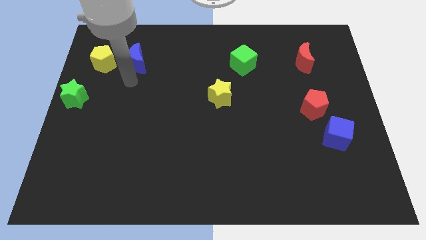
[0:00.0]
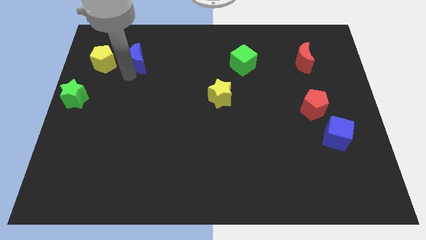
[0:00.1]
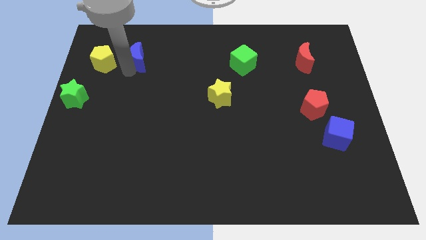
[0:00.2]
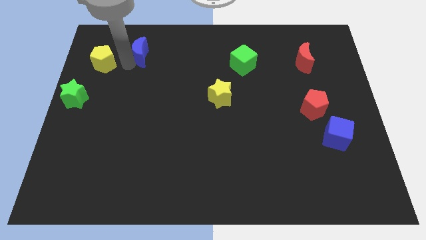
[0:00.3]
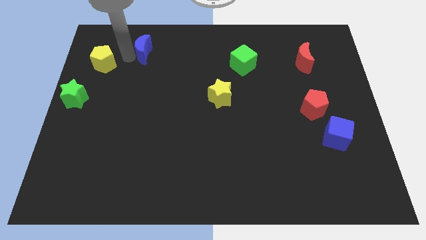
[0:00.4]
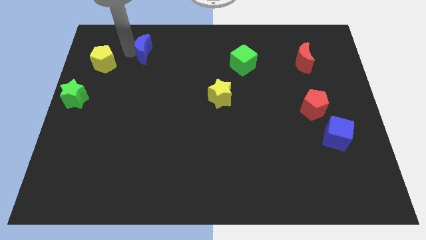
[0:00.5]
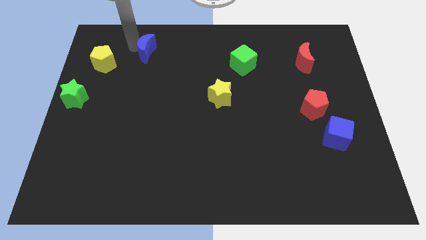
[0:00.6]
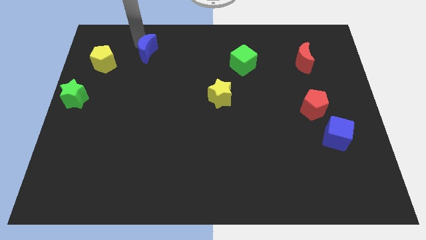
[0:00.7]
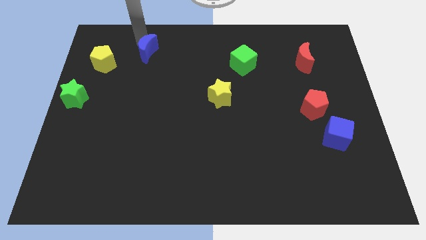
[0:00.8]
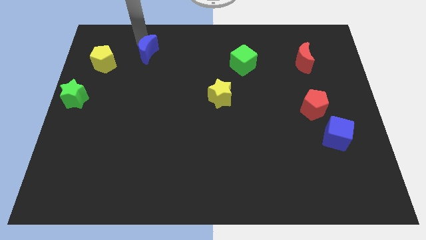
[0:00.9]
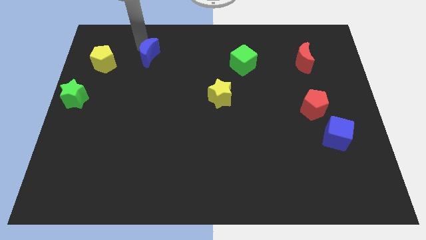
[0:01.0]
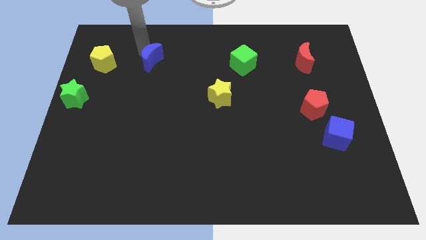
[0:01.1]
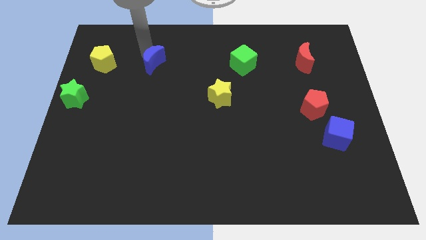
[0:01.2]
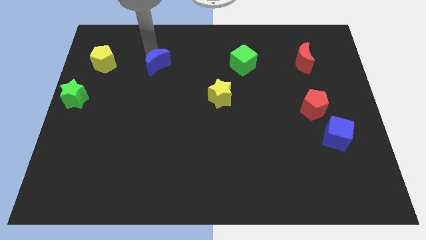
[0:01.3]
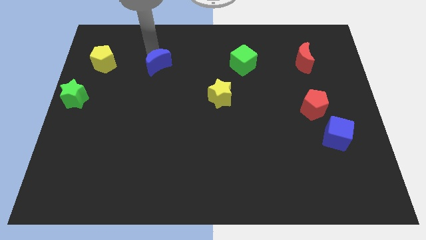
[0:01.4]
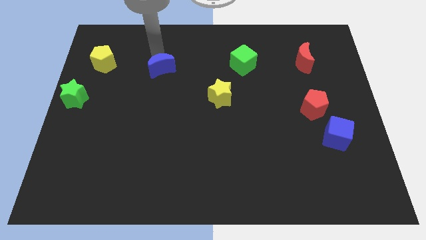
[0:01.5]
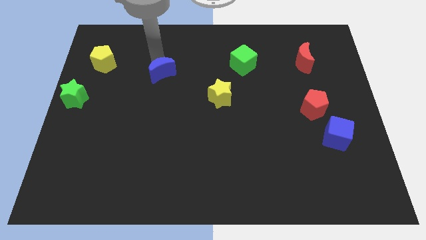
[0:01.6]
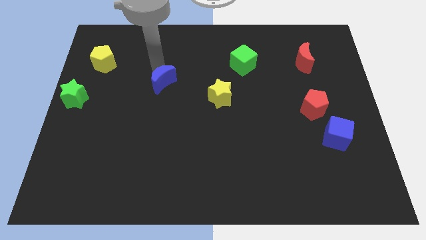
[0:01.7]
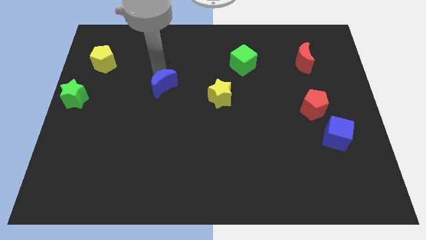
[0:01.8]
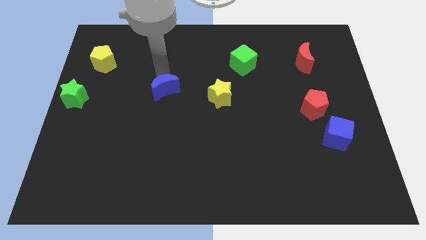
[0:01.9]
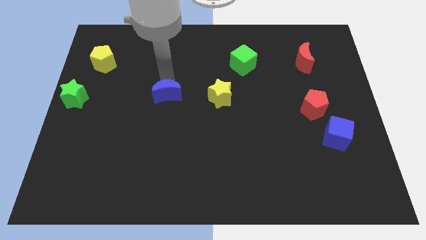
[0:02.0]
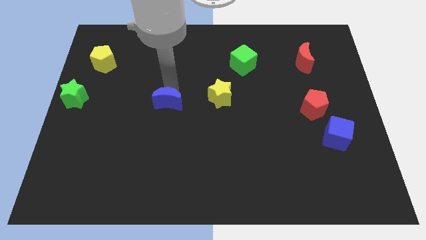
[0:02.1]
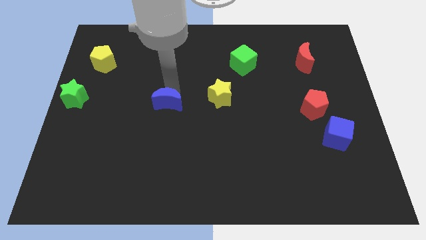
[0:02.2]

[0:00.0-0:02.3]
place the blue moon left to the yellow star

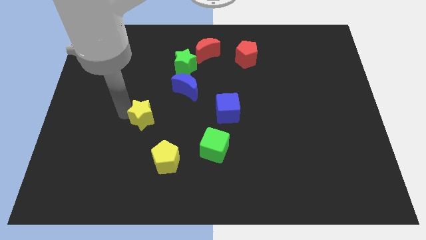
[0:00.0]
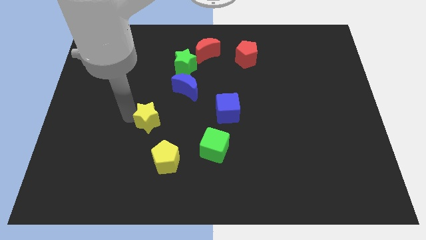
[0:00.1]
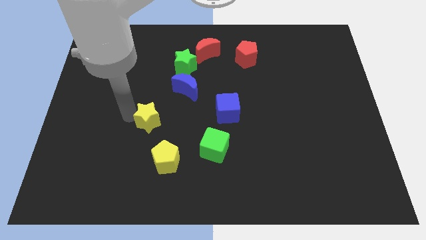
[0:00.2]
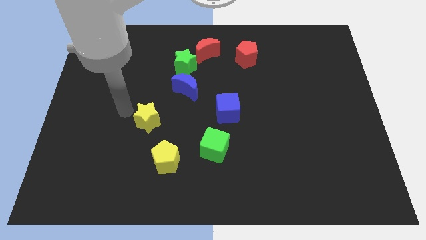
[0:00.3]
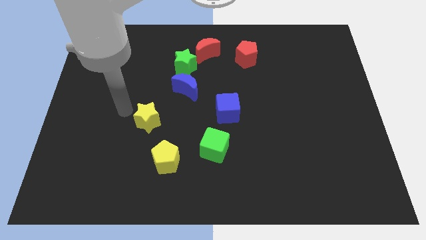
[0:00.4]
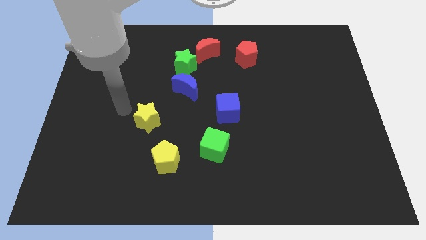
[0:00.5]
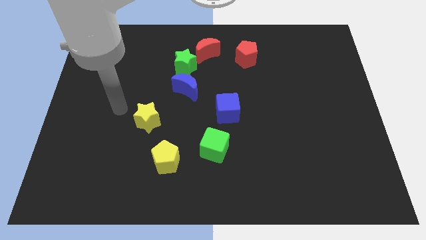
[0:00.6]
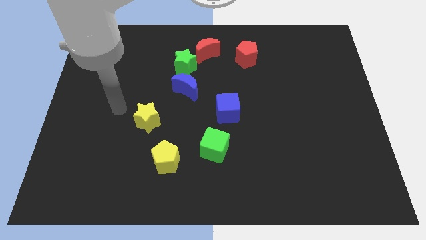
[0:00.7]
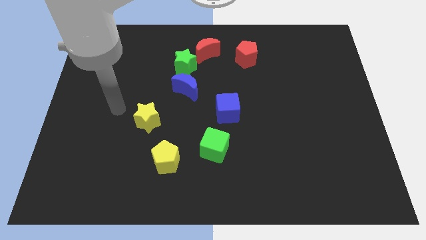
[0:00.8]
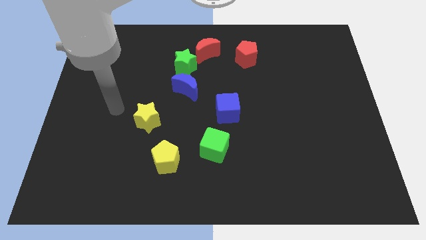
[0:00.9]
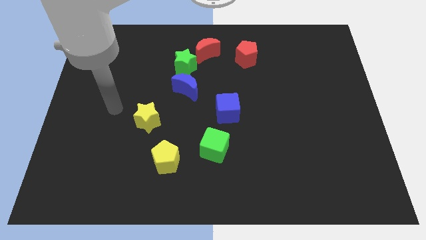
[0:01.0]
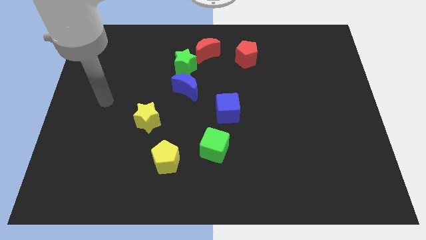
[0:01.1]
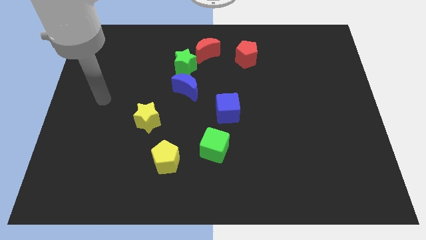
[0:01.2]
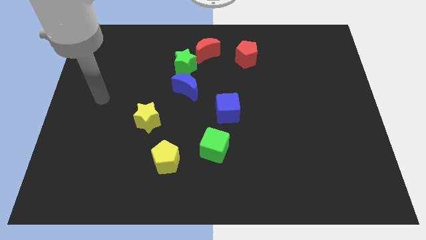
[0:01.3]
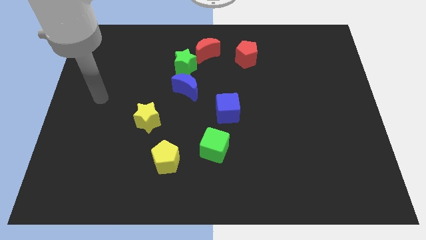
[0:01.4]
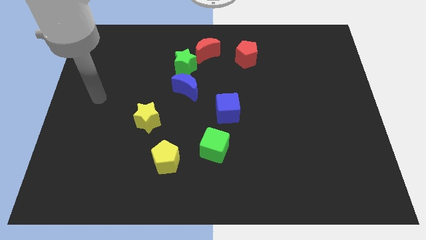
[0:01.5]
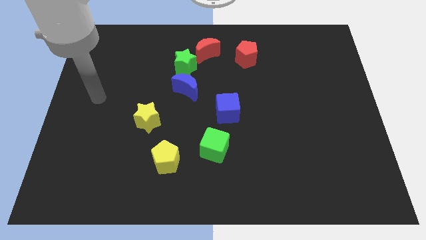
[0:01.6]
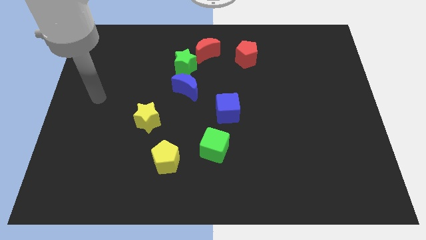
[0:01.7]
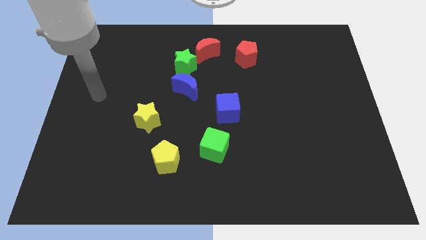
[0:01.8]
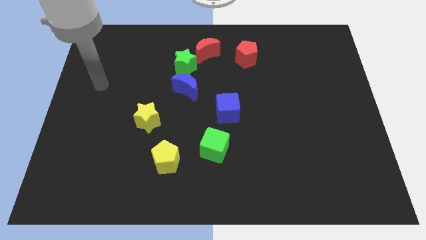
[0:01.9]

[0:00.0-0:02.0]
move away from the yellow star

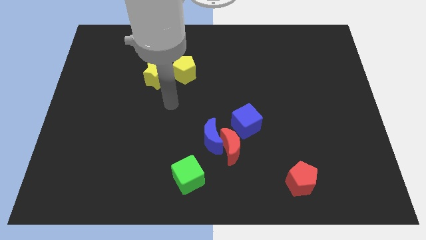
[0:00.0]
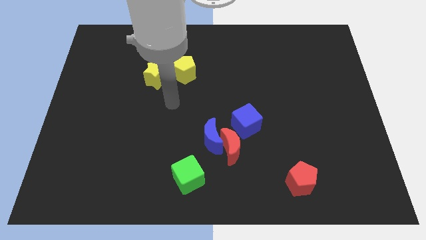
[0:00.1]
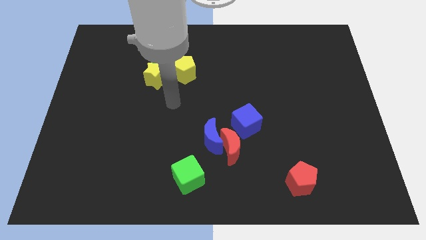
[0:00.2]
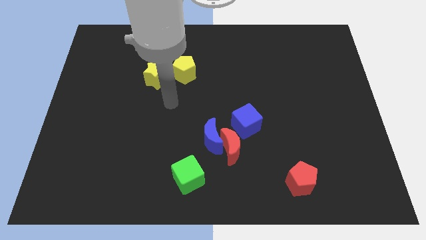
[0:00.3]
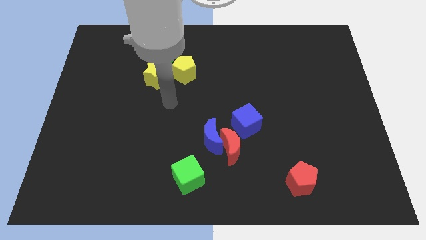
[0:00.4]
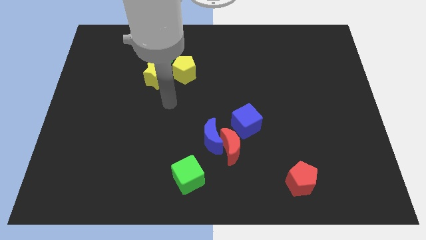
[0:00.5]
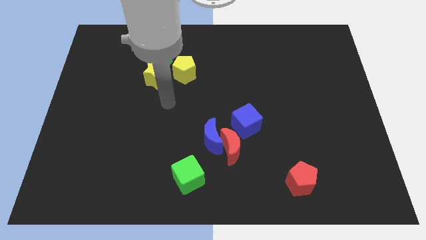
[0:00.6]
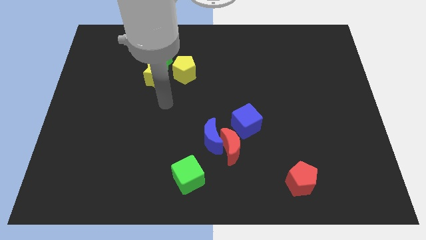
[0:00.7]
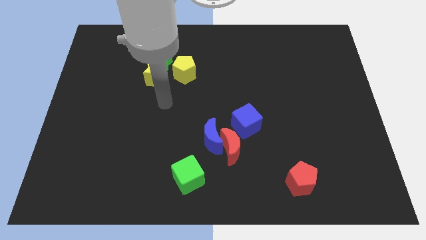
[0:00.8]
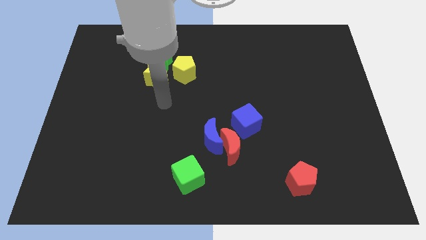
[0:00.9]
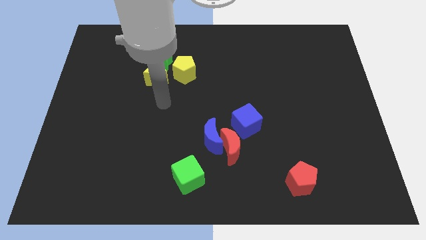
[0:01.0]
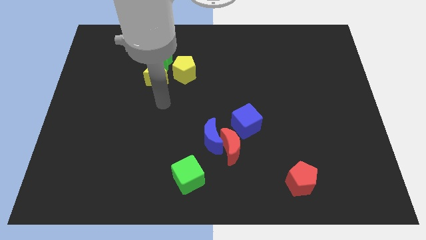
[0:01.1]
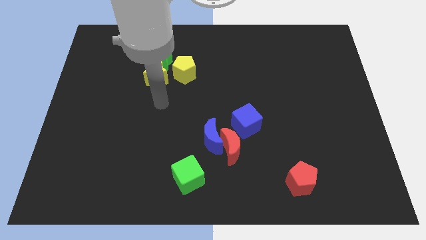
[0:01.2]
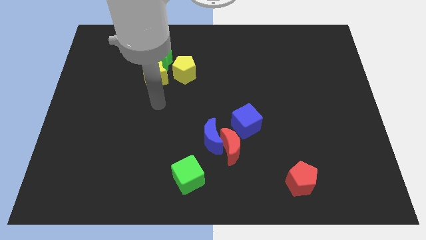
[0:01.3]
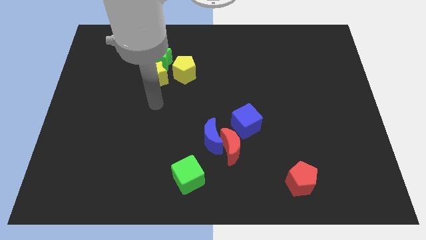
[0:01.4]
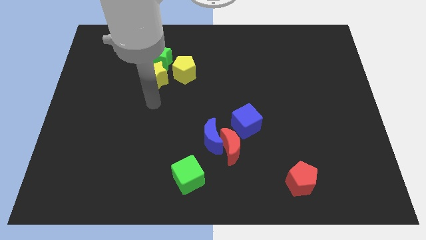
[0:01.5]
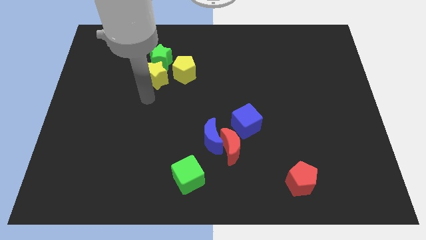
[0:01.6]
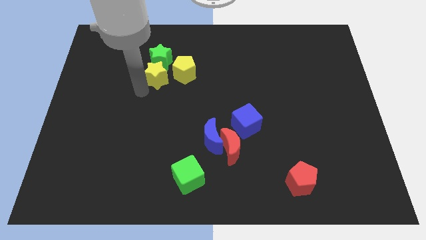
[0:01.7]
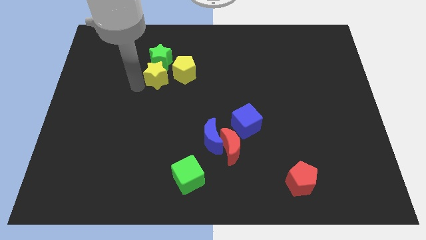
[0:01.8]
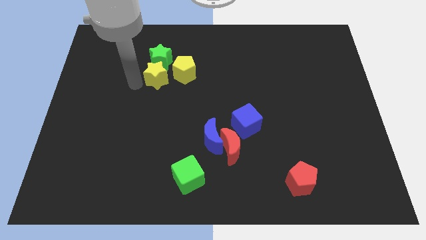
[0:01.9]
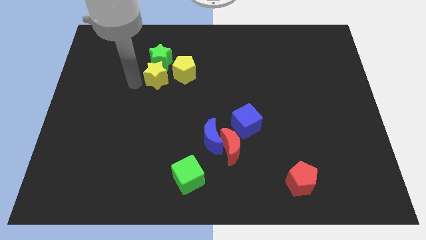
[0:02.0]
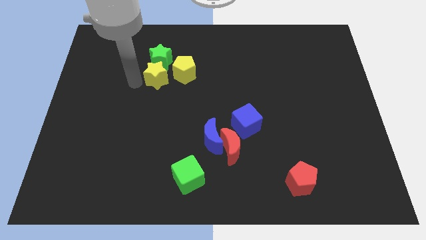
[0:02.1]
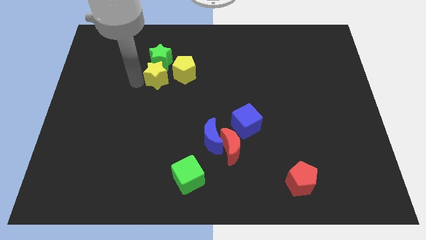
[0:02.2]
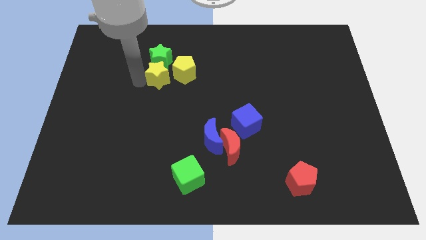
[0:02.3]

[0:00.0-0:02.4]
point your arm left to yellow star

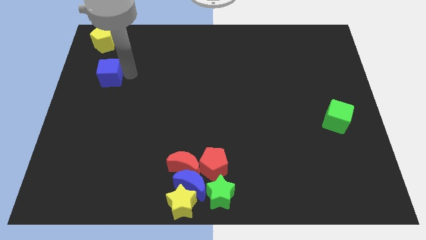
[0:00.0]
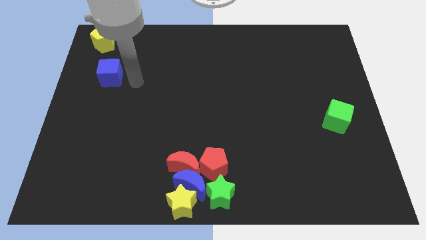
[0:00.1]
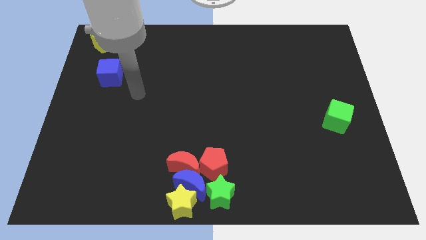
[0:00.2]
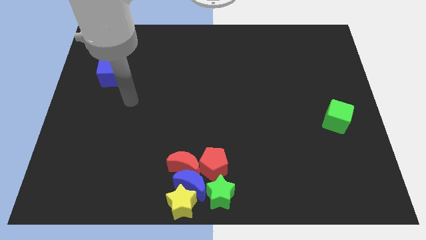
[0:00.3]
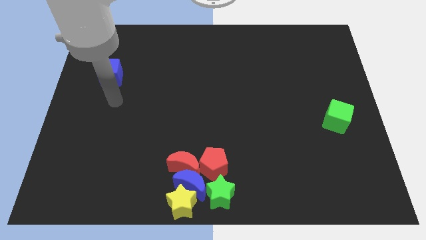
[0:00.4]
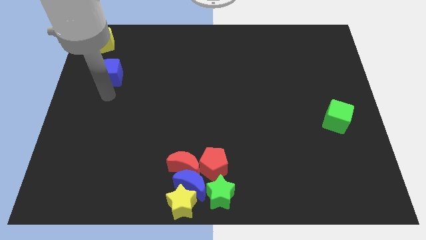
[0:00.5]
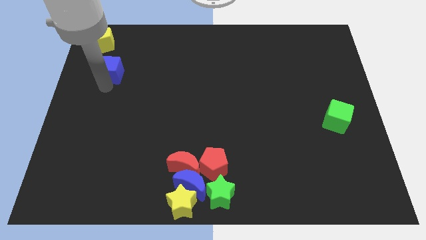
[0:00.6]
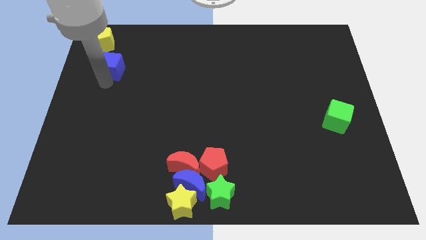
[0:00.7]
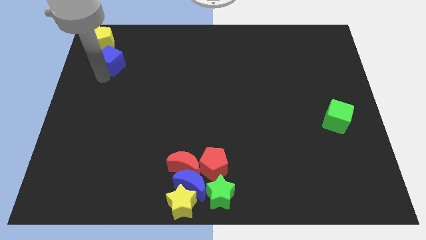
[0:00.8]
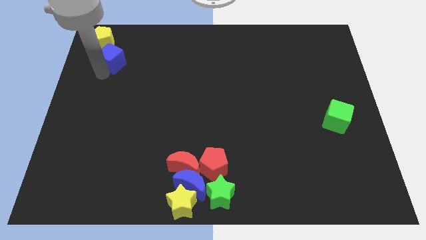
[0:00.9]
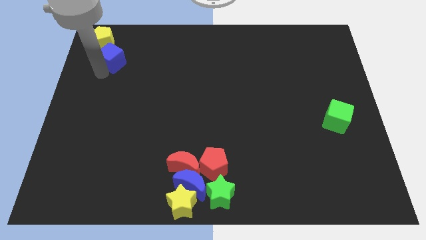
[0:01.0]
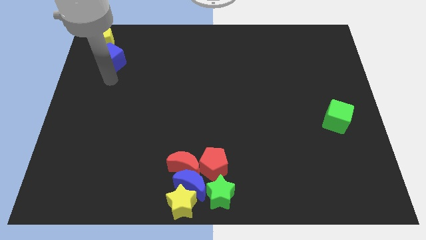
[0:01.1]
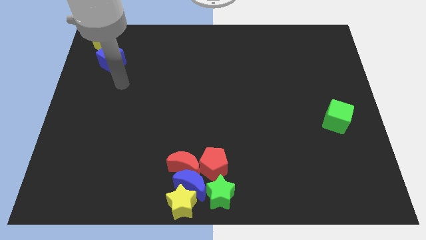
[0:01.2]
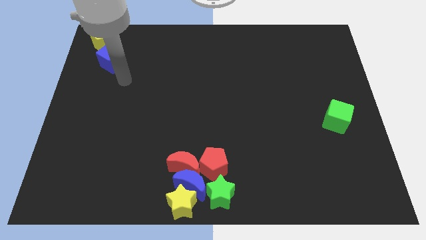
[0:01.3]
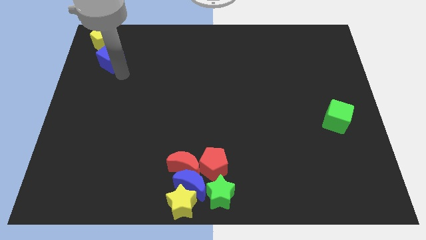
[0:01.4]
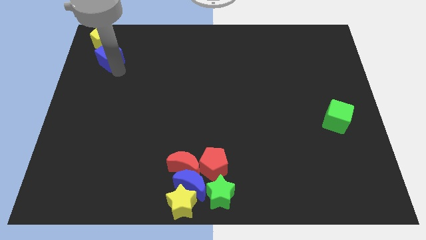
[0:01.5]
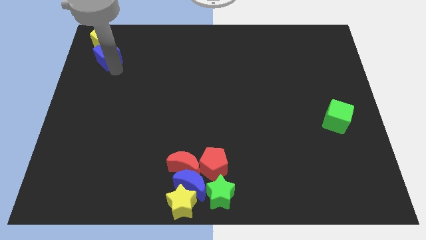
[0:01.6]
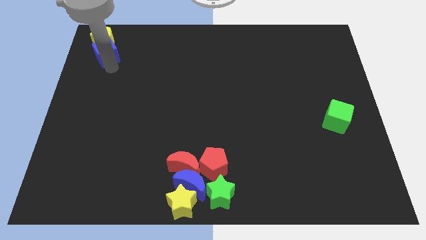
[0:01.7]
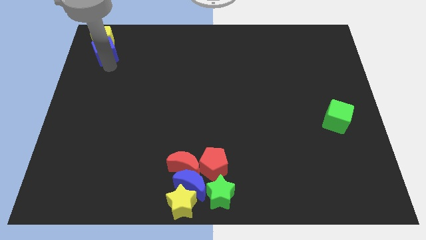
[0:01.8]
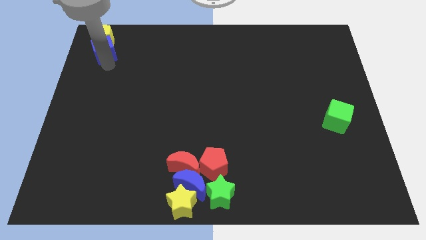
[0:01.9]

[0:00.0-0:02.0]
push the blue cube into the yellow pentagon

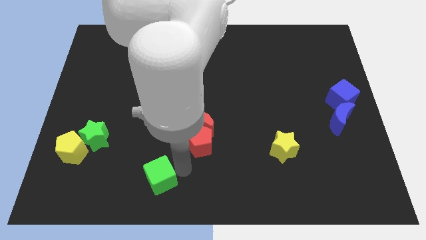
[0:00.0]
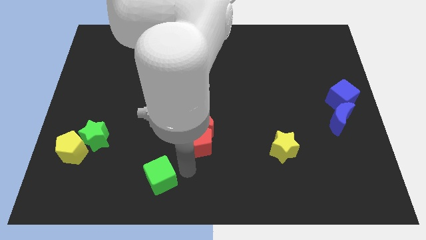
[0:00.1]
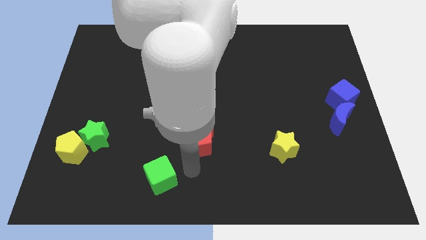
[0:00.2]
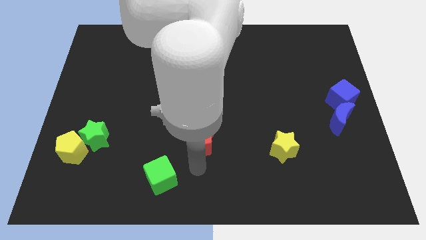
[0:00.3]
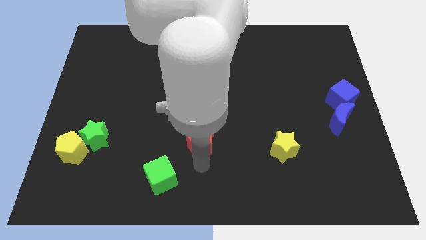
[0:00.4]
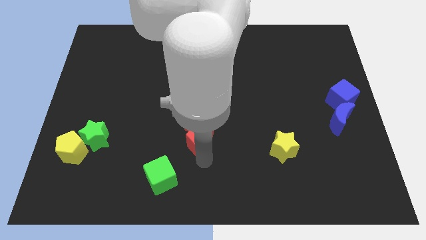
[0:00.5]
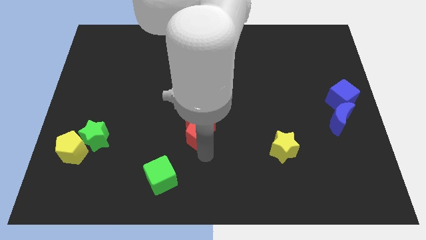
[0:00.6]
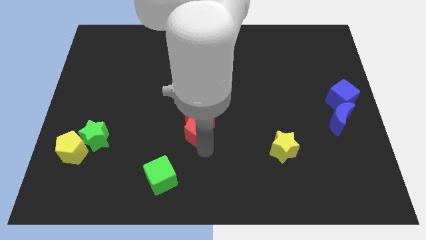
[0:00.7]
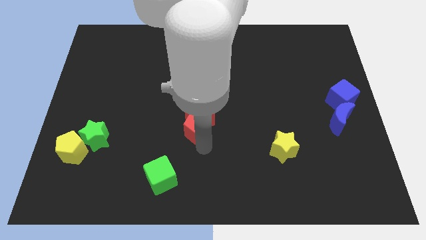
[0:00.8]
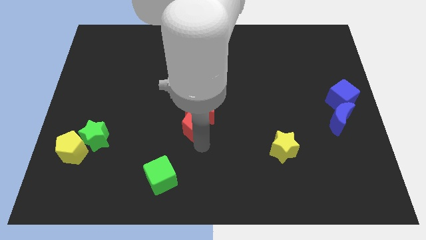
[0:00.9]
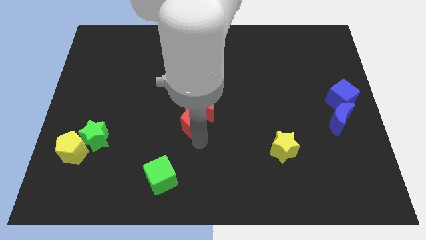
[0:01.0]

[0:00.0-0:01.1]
move red blocks upwards
